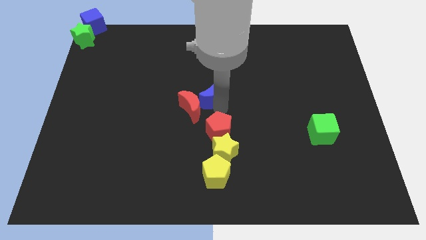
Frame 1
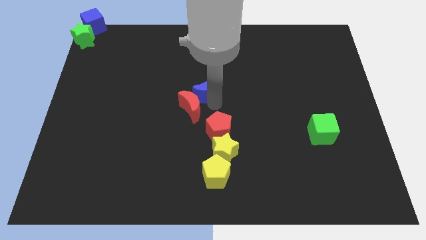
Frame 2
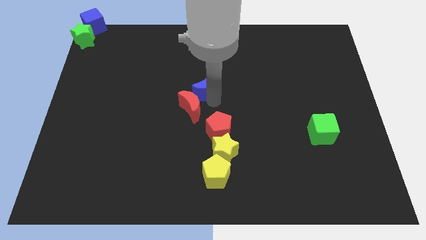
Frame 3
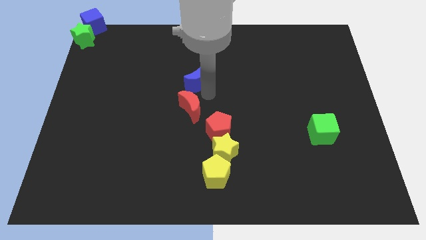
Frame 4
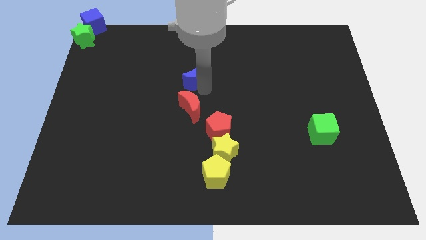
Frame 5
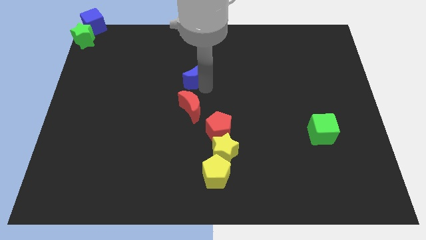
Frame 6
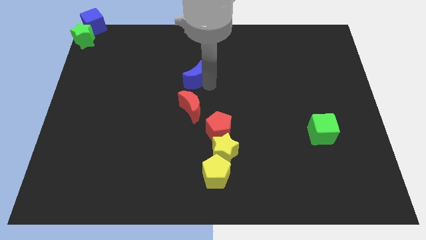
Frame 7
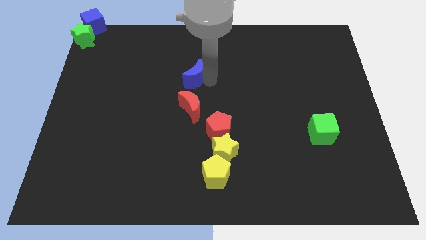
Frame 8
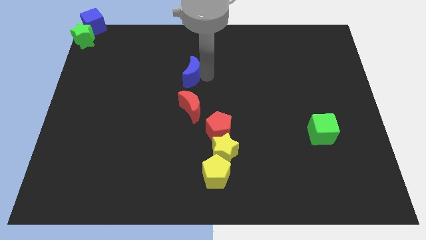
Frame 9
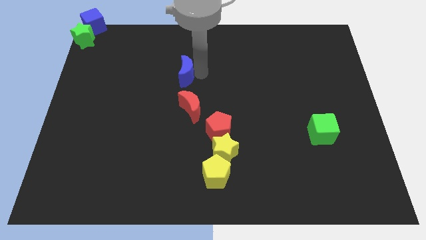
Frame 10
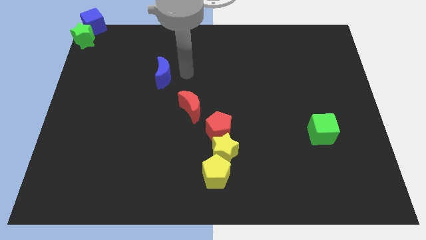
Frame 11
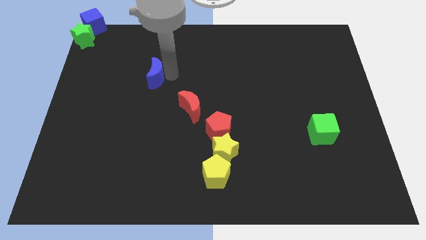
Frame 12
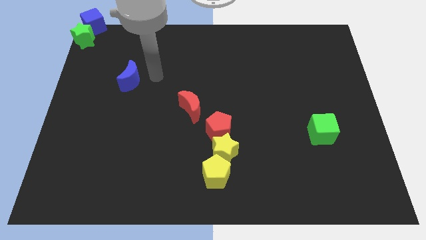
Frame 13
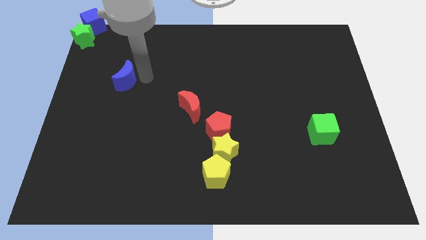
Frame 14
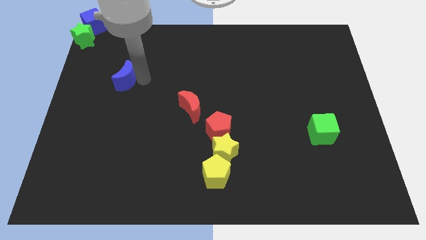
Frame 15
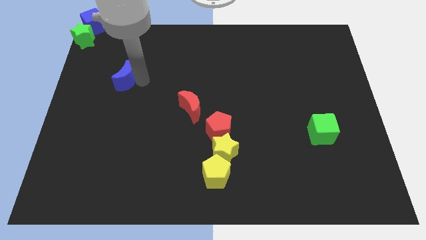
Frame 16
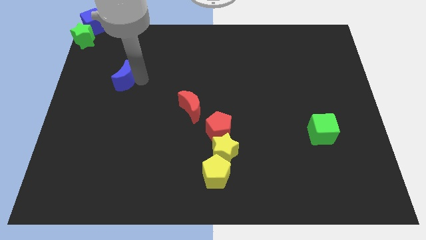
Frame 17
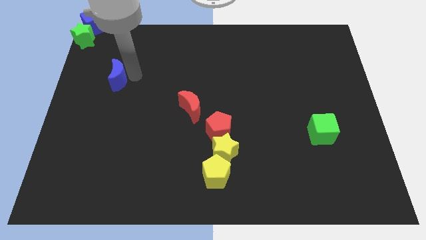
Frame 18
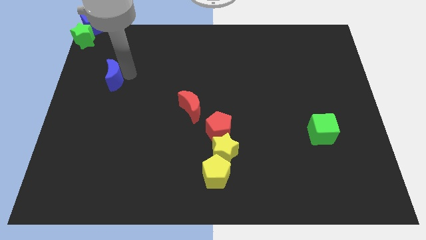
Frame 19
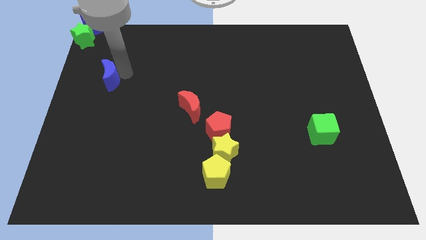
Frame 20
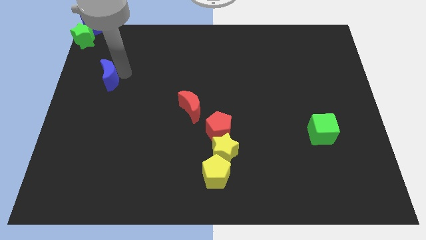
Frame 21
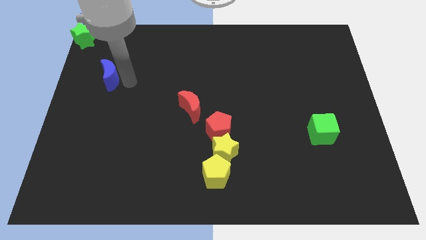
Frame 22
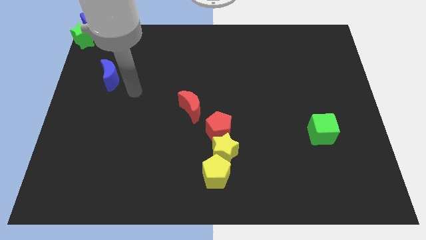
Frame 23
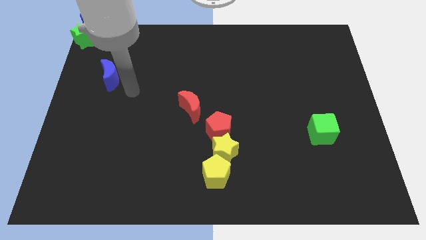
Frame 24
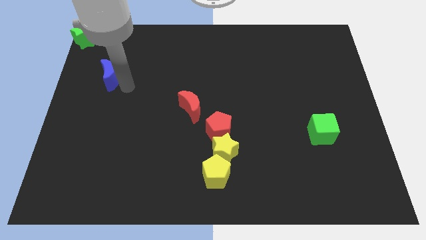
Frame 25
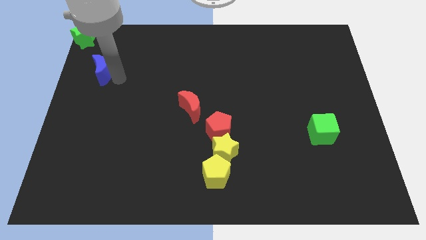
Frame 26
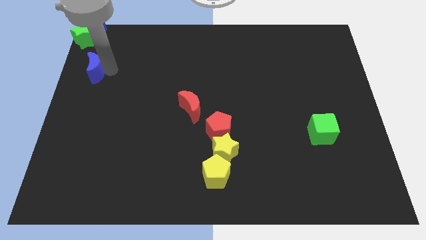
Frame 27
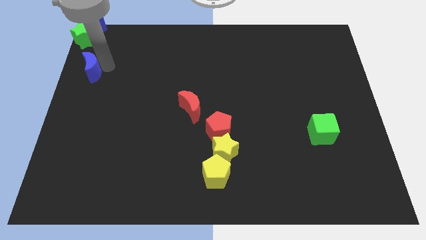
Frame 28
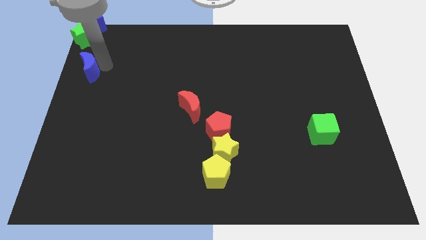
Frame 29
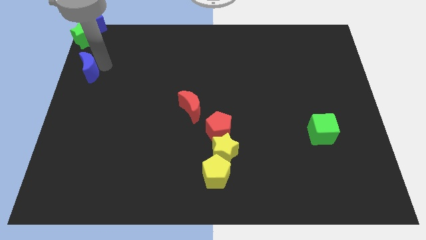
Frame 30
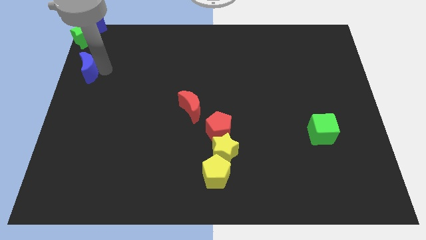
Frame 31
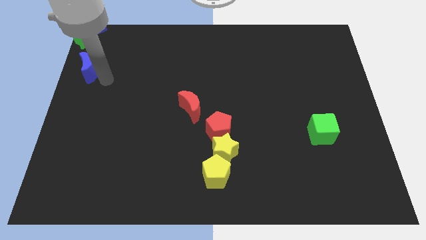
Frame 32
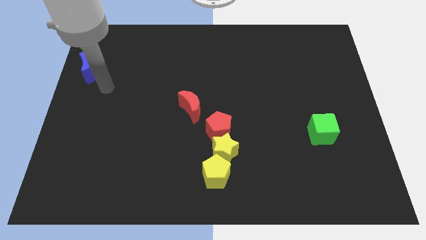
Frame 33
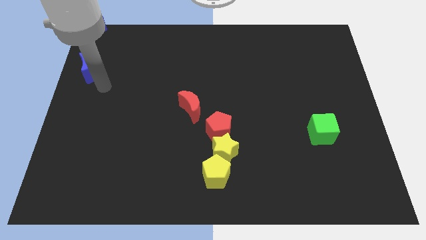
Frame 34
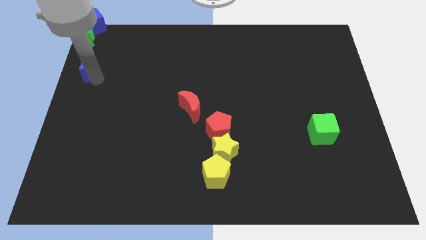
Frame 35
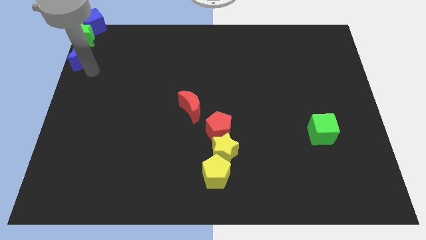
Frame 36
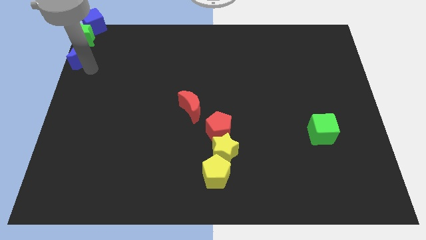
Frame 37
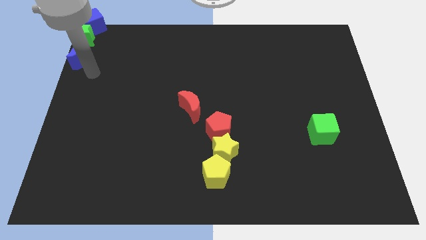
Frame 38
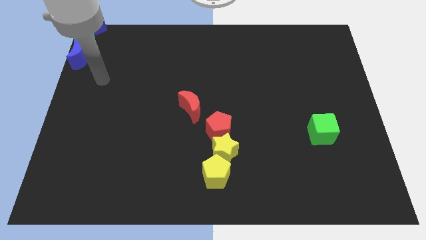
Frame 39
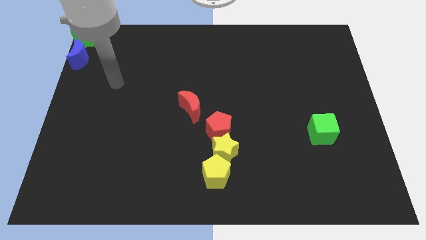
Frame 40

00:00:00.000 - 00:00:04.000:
place the blue crescent bottom of the green star

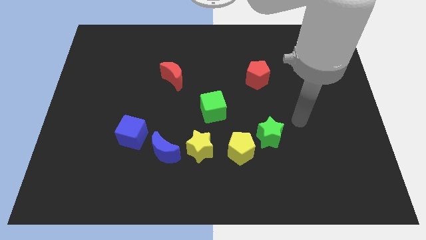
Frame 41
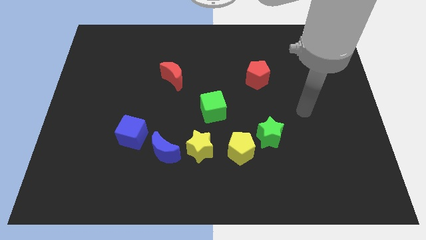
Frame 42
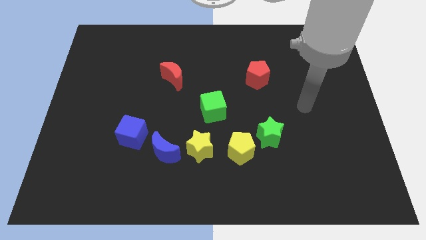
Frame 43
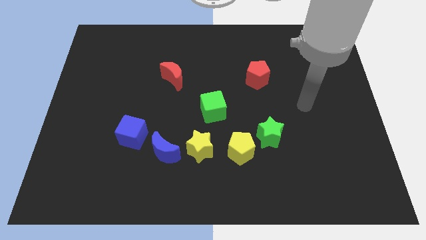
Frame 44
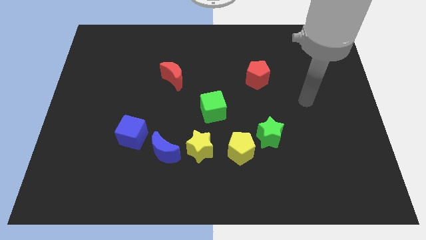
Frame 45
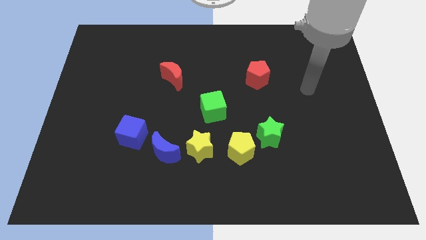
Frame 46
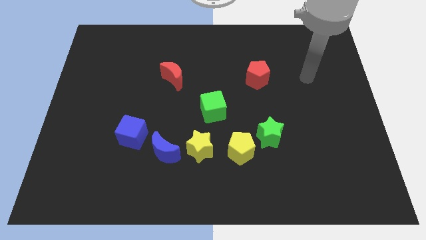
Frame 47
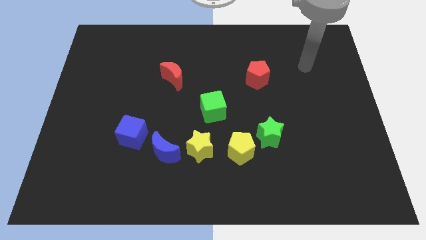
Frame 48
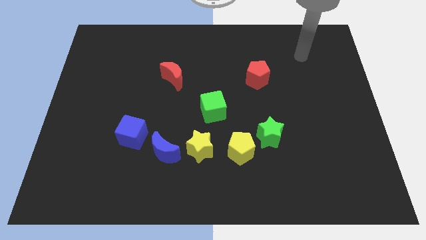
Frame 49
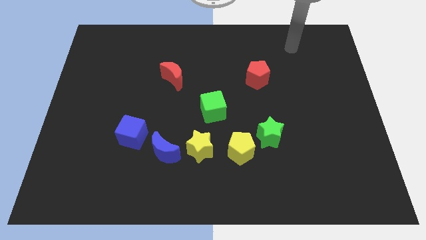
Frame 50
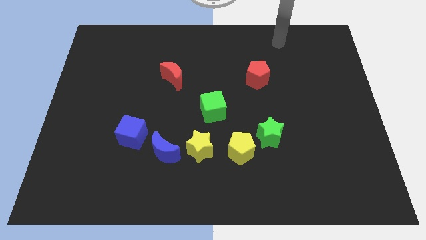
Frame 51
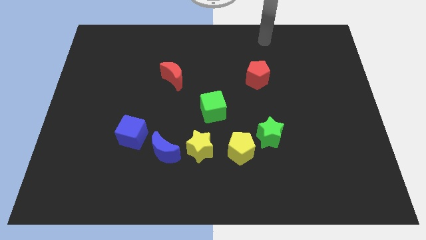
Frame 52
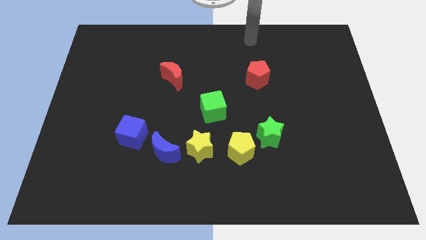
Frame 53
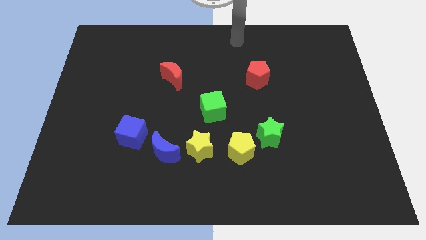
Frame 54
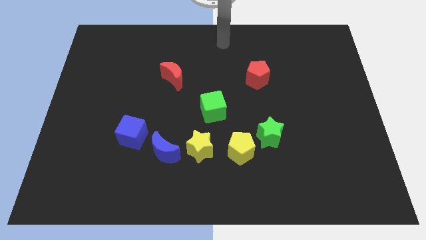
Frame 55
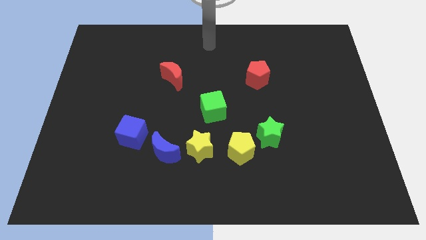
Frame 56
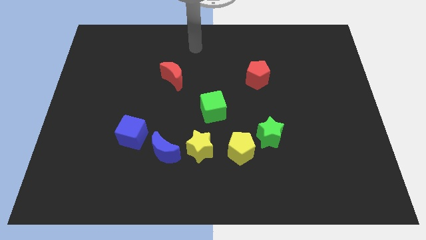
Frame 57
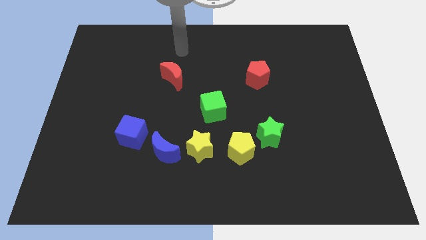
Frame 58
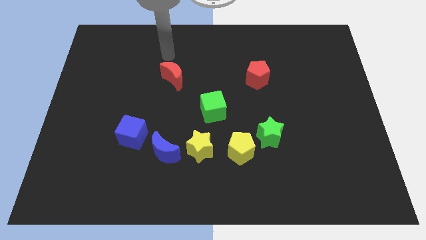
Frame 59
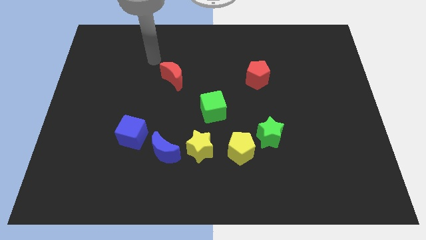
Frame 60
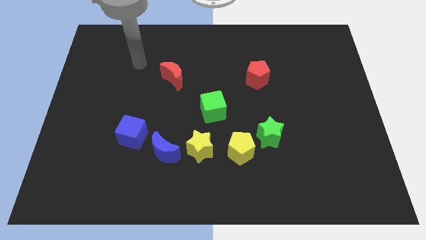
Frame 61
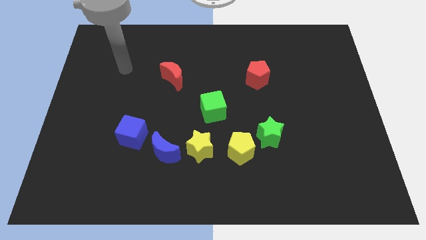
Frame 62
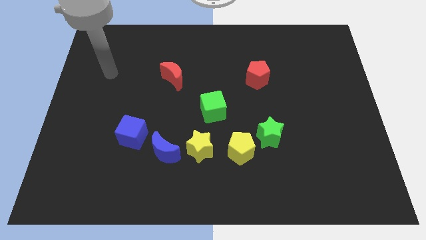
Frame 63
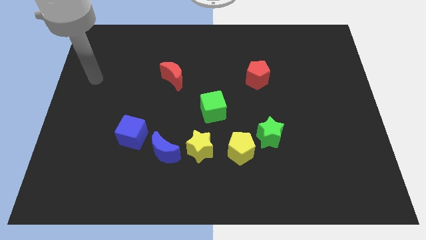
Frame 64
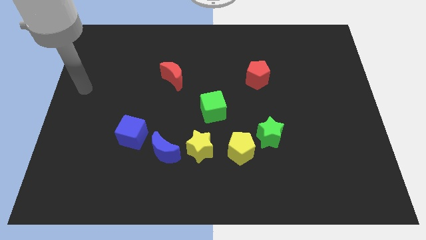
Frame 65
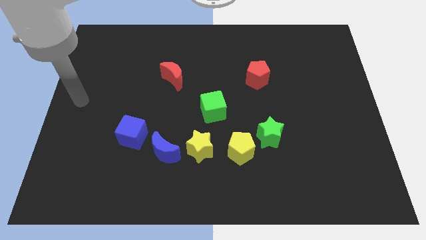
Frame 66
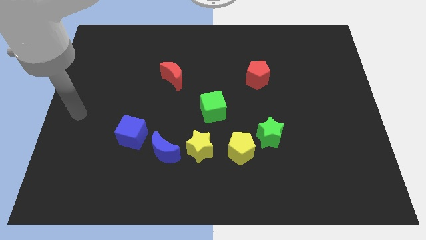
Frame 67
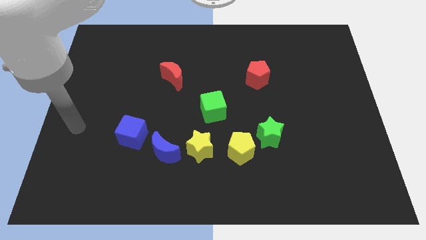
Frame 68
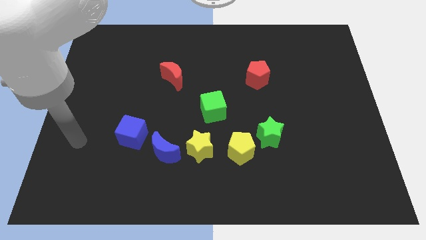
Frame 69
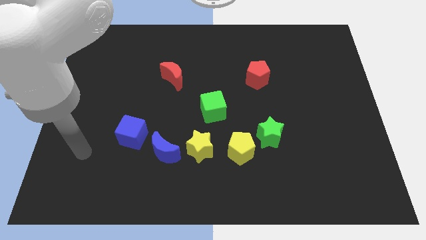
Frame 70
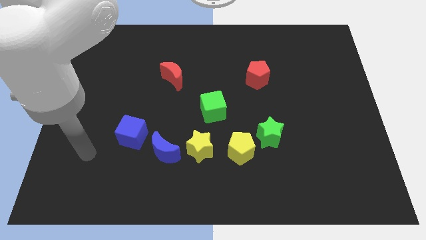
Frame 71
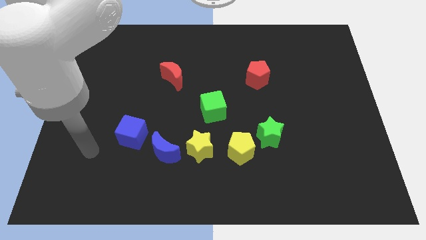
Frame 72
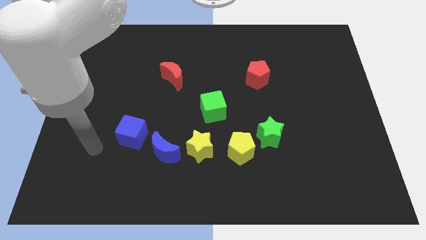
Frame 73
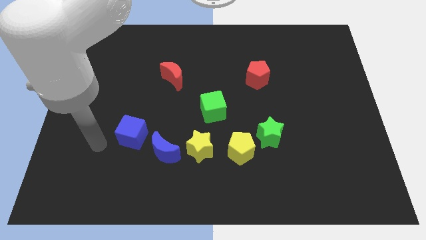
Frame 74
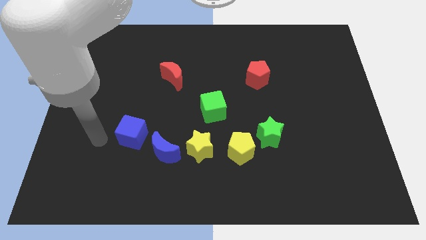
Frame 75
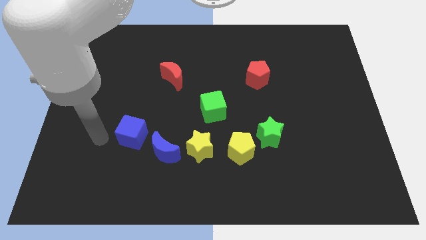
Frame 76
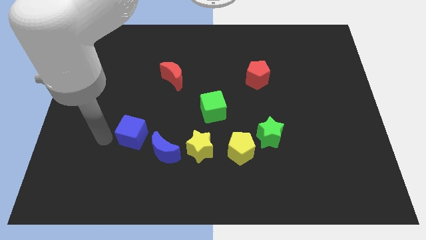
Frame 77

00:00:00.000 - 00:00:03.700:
move the arm away from the green star

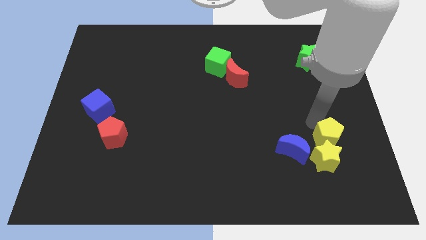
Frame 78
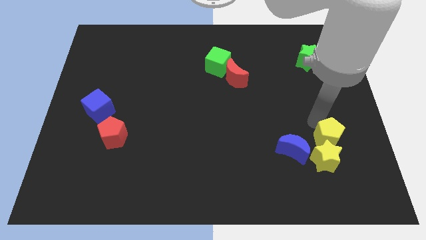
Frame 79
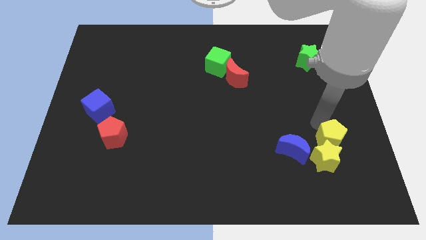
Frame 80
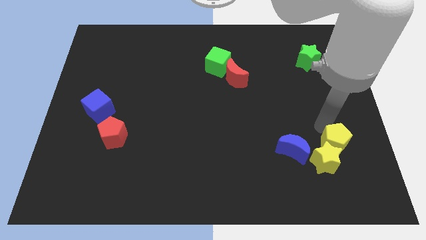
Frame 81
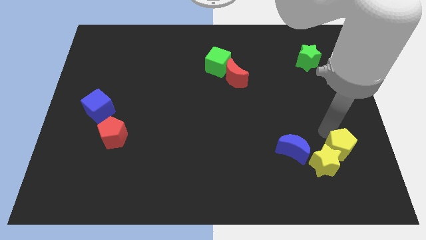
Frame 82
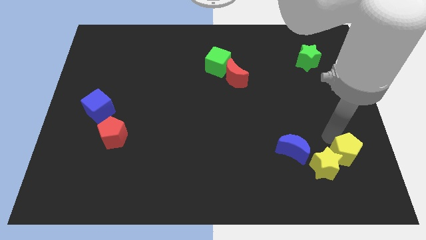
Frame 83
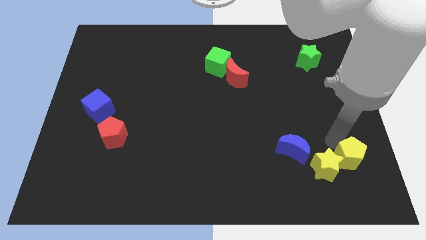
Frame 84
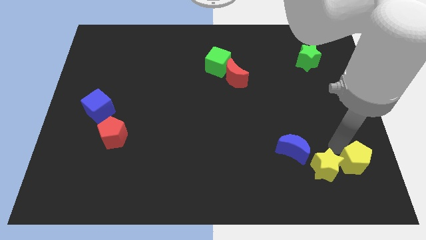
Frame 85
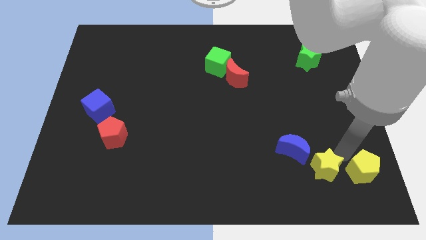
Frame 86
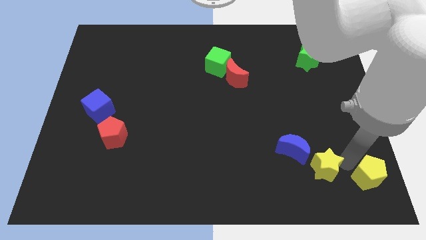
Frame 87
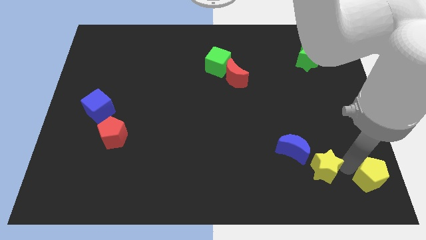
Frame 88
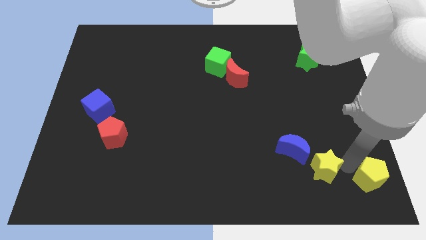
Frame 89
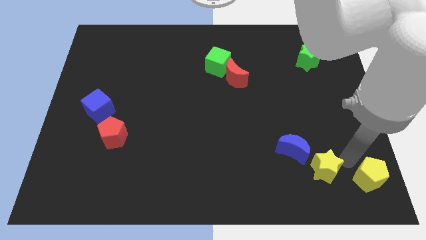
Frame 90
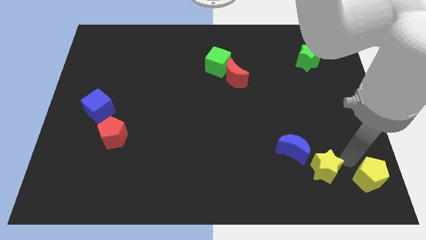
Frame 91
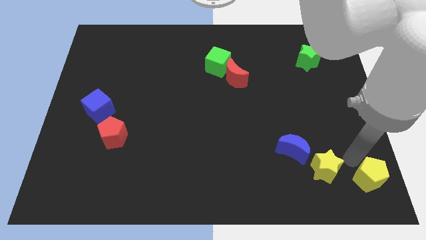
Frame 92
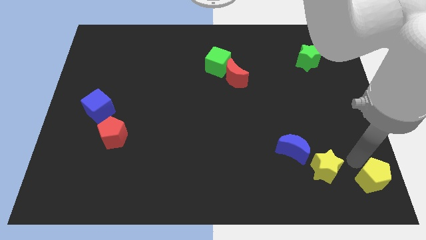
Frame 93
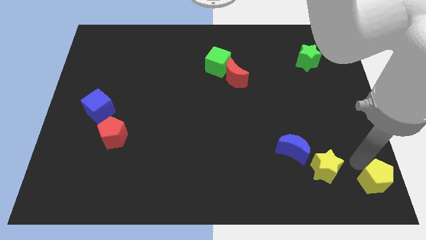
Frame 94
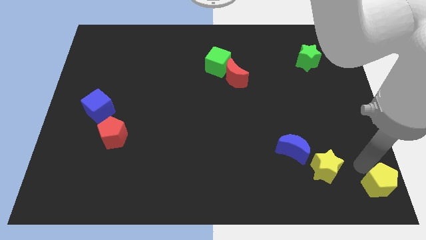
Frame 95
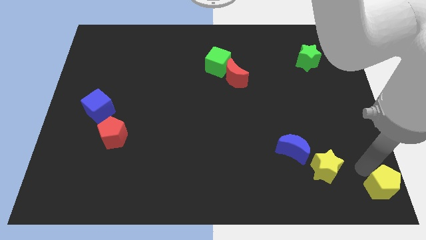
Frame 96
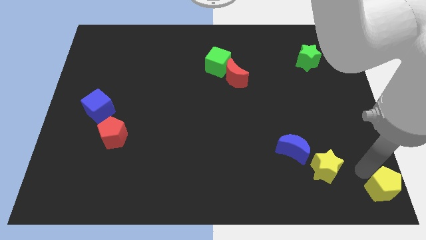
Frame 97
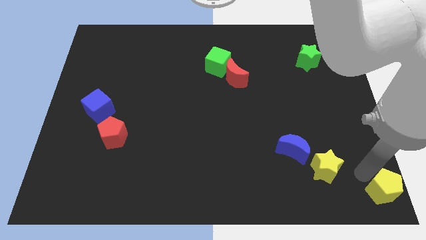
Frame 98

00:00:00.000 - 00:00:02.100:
separate the yellow pentagon from the yellow star
